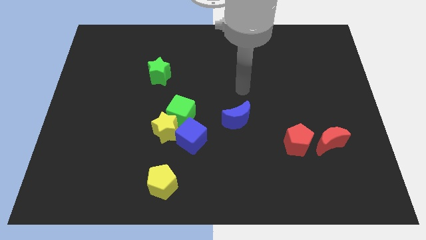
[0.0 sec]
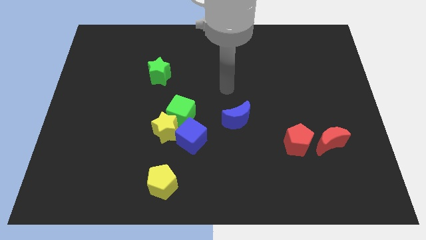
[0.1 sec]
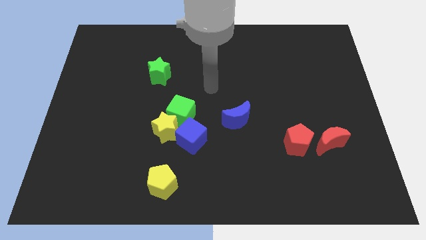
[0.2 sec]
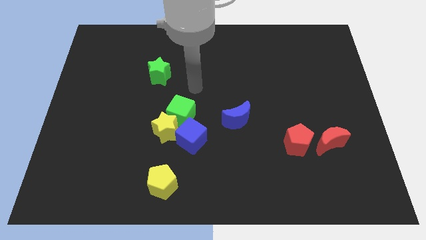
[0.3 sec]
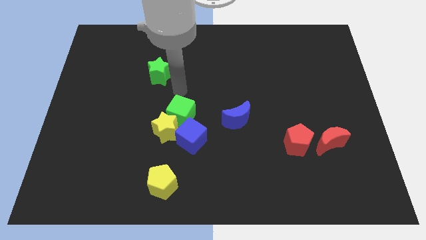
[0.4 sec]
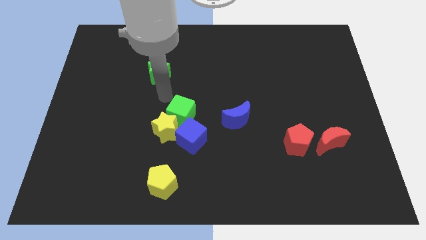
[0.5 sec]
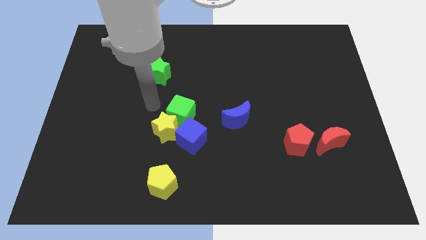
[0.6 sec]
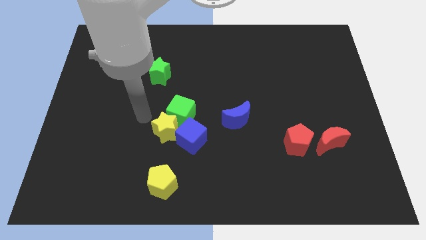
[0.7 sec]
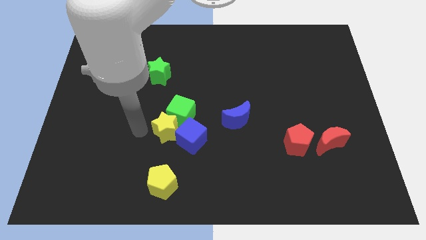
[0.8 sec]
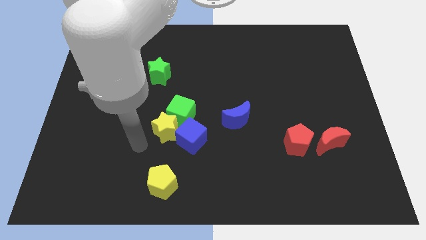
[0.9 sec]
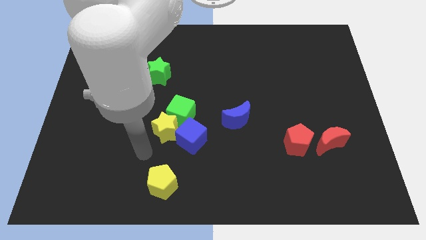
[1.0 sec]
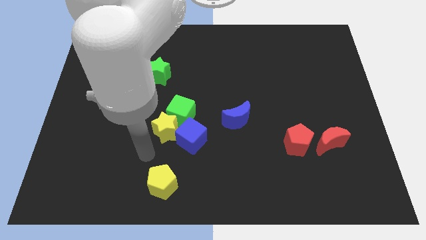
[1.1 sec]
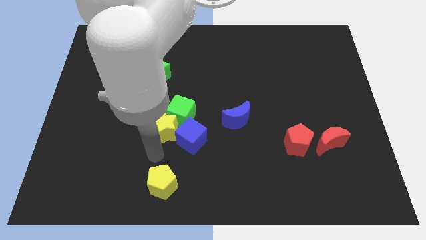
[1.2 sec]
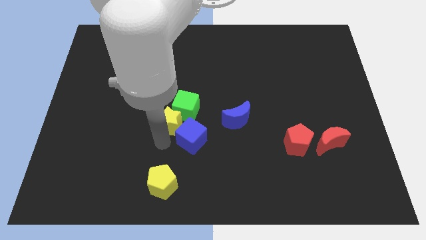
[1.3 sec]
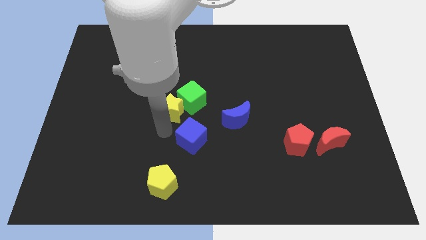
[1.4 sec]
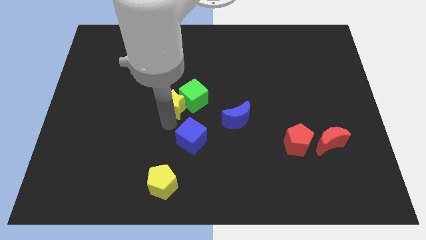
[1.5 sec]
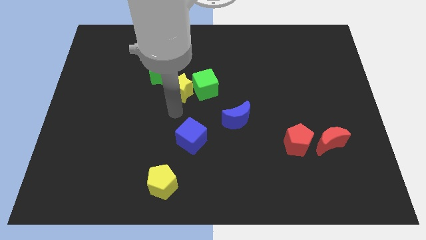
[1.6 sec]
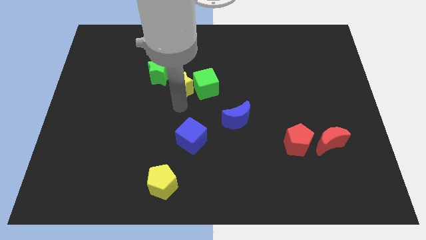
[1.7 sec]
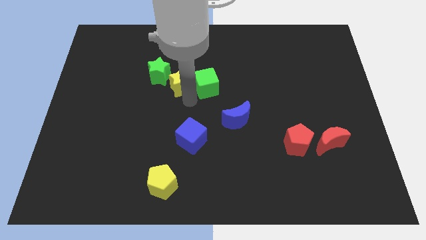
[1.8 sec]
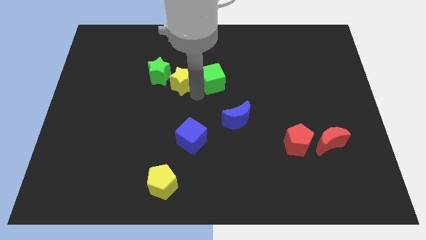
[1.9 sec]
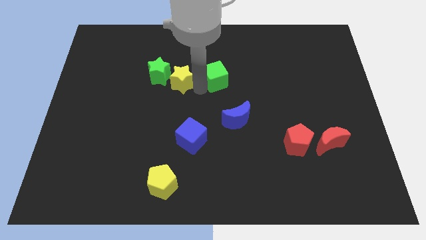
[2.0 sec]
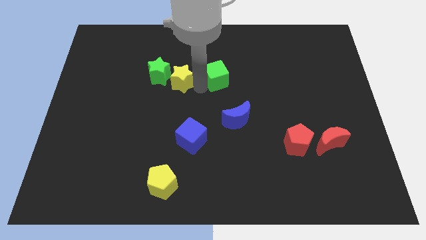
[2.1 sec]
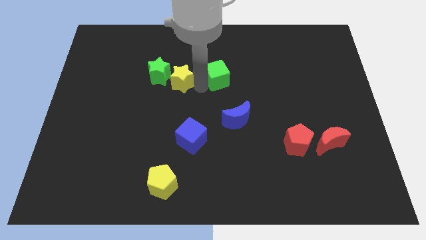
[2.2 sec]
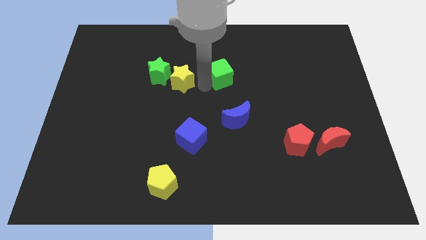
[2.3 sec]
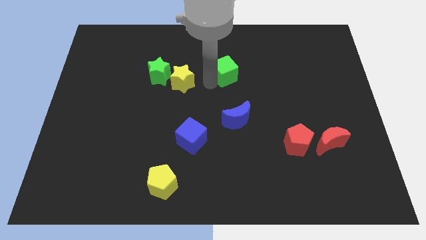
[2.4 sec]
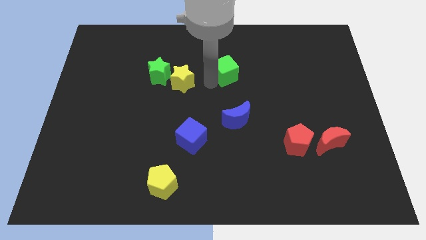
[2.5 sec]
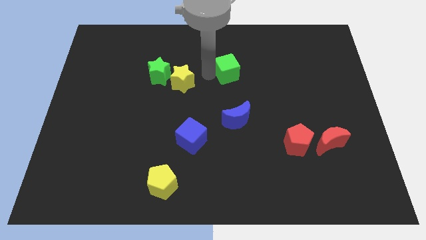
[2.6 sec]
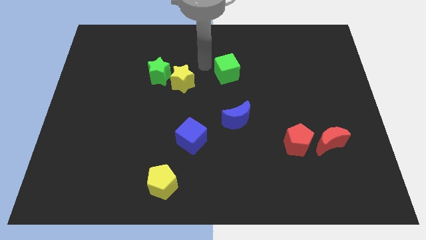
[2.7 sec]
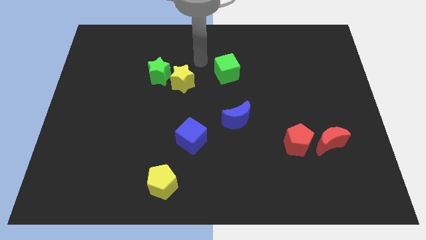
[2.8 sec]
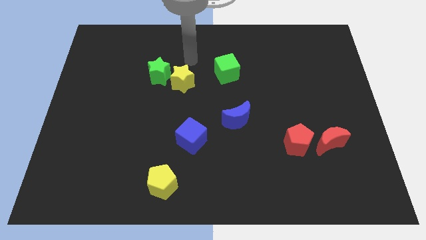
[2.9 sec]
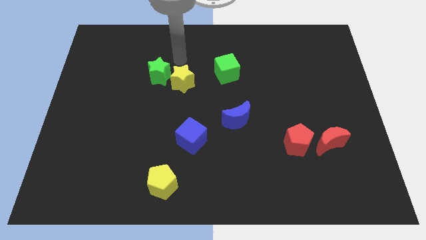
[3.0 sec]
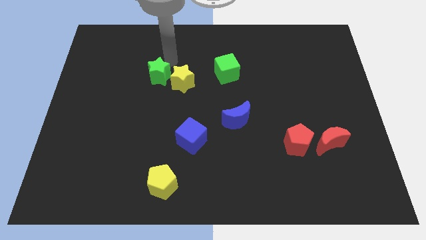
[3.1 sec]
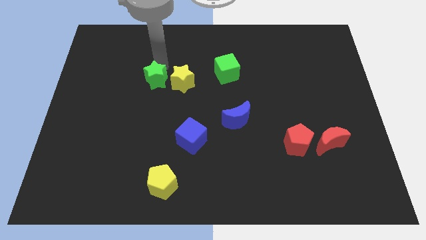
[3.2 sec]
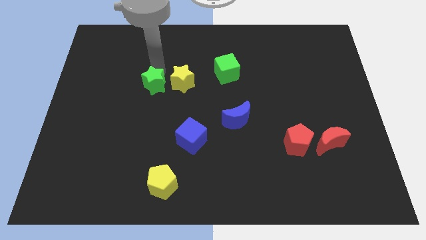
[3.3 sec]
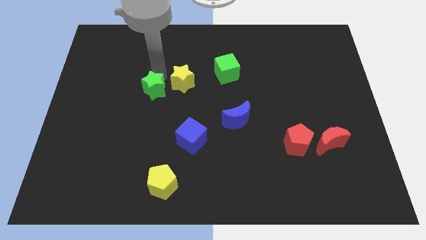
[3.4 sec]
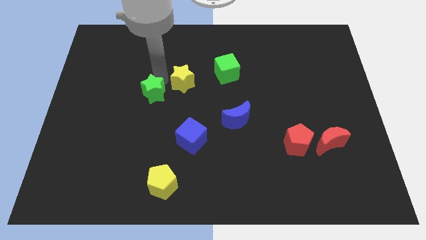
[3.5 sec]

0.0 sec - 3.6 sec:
place the yellow star in between the green blocks

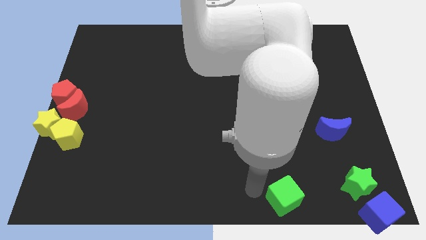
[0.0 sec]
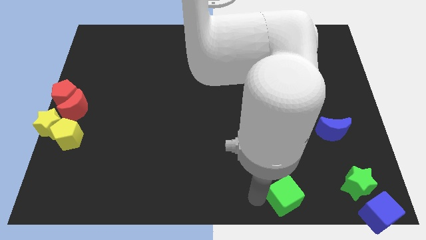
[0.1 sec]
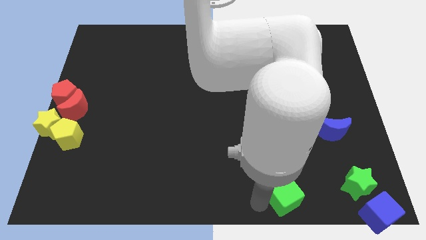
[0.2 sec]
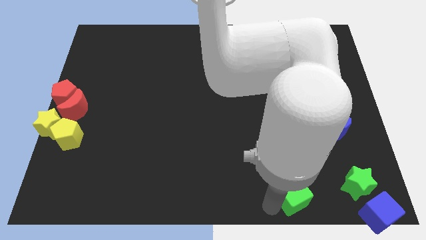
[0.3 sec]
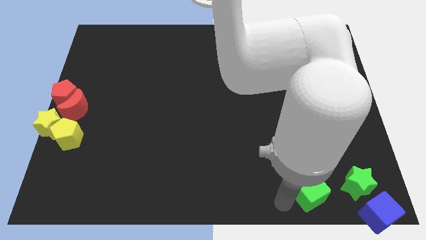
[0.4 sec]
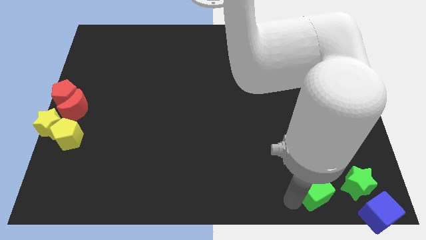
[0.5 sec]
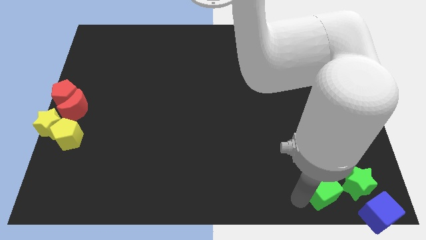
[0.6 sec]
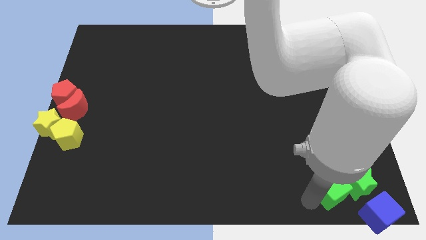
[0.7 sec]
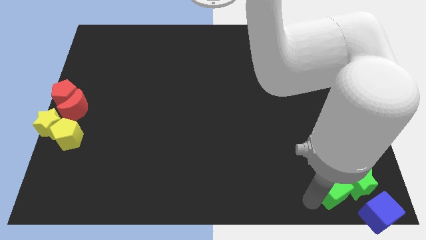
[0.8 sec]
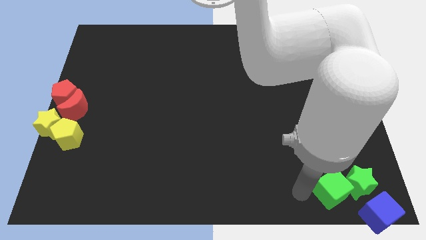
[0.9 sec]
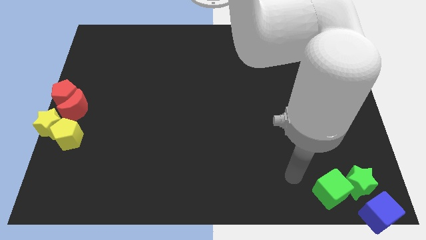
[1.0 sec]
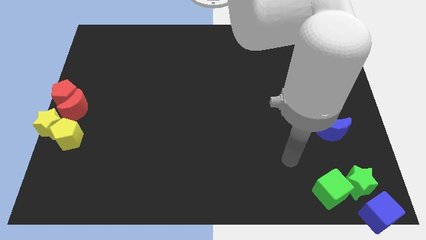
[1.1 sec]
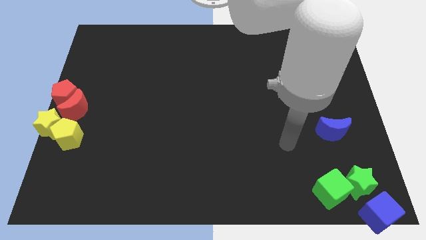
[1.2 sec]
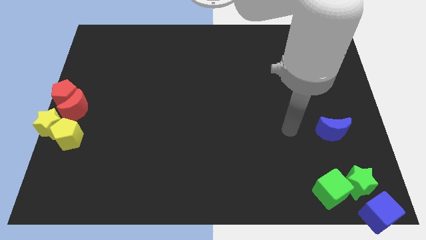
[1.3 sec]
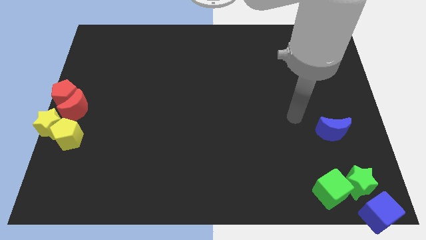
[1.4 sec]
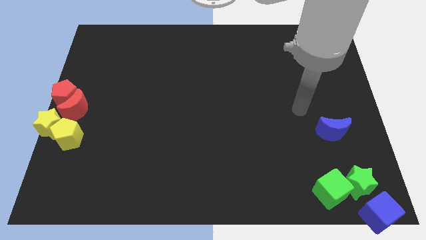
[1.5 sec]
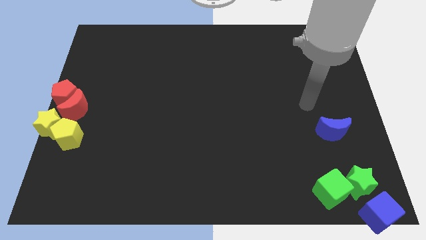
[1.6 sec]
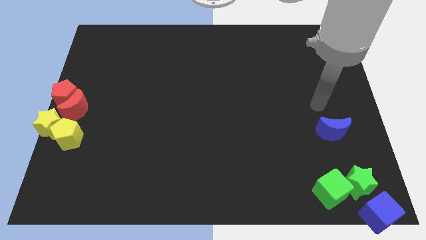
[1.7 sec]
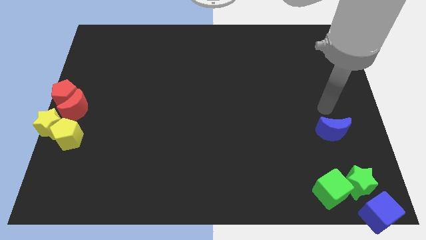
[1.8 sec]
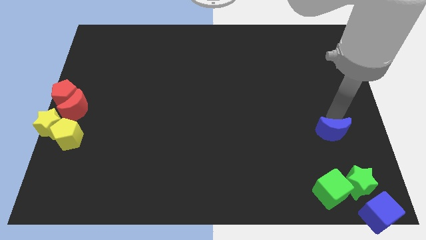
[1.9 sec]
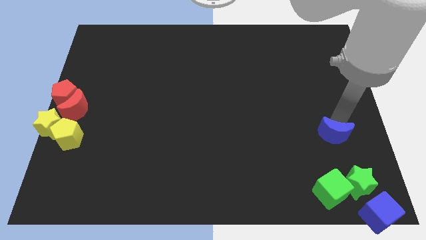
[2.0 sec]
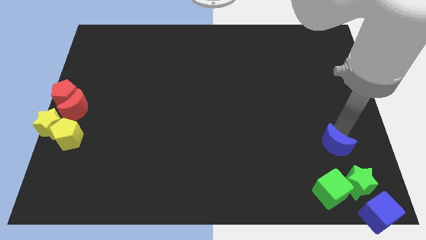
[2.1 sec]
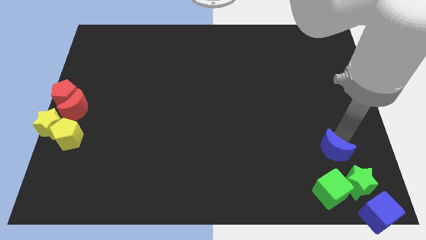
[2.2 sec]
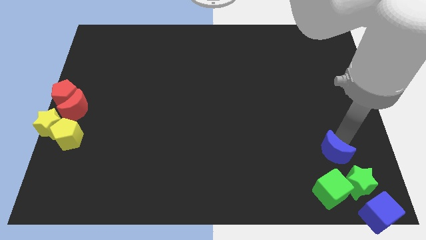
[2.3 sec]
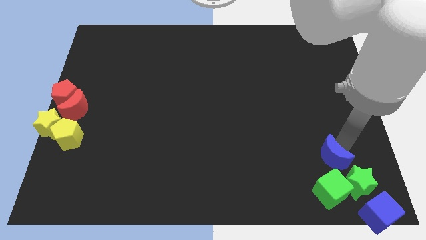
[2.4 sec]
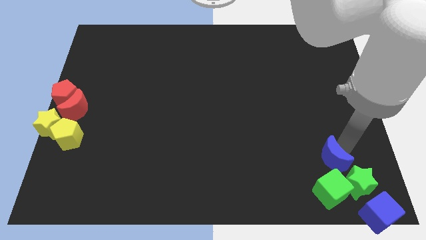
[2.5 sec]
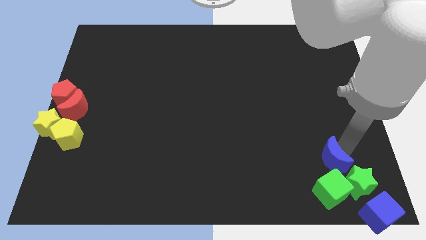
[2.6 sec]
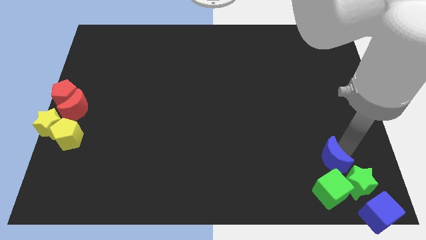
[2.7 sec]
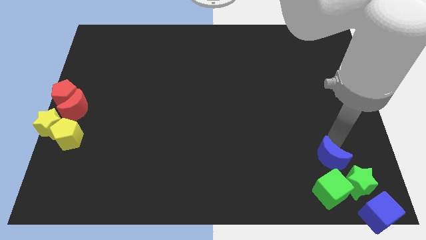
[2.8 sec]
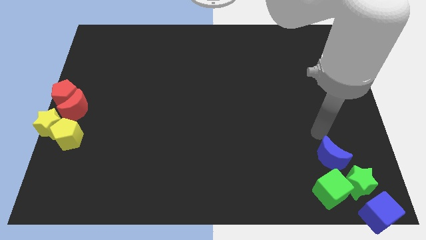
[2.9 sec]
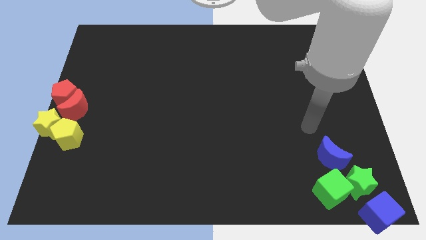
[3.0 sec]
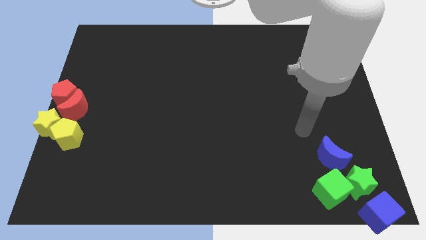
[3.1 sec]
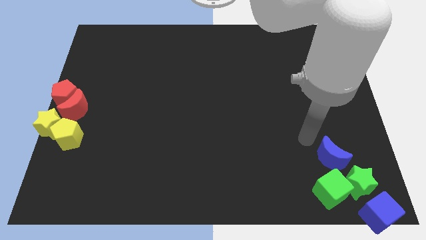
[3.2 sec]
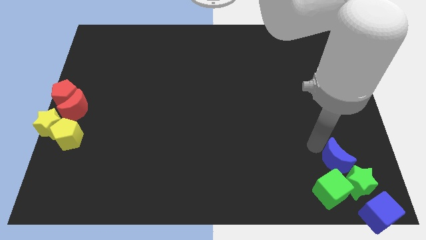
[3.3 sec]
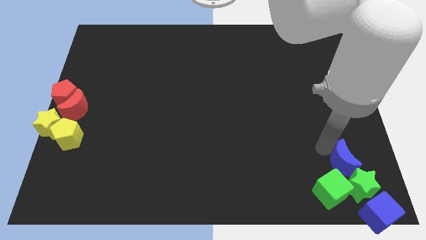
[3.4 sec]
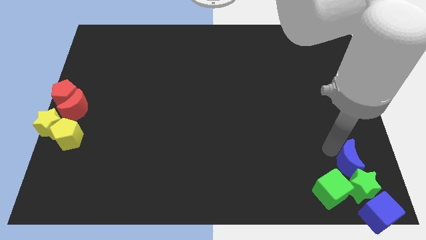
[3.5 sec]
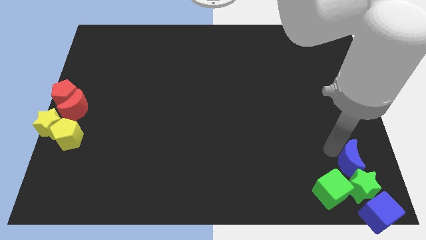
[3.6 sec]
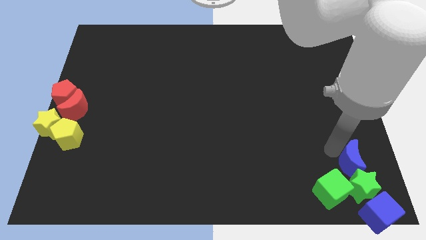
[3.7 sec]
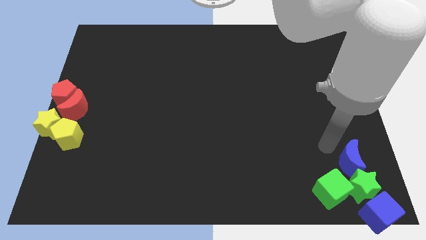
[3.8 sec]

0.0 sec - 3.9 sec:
push the blue crescent into the green star

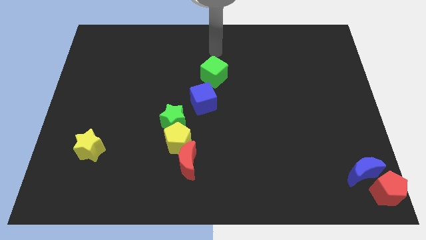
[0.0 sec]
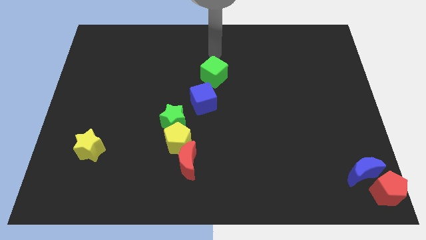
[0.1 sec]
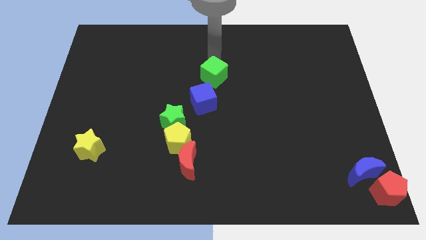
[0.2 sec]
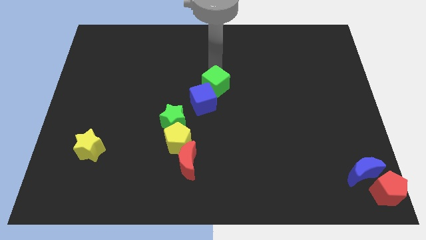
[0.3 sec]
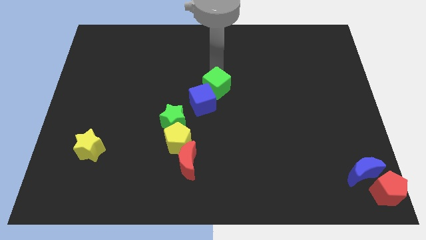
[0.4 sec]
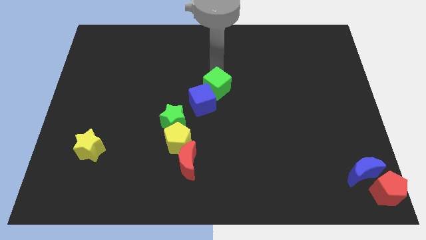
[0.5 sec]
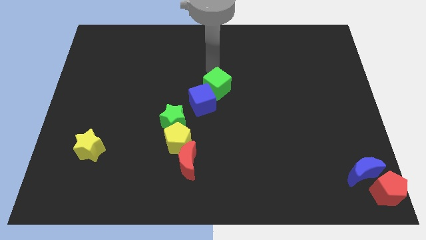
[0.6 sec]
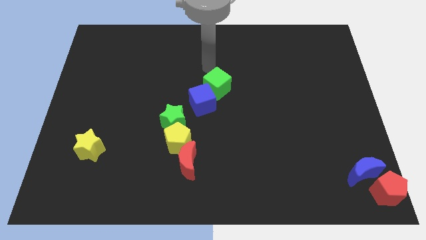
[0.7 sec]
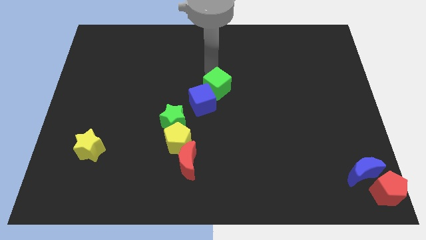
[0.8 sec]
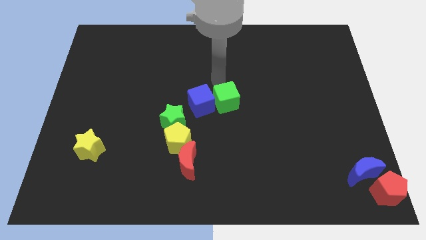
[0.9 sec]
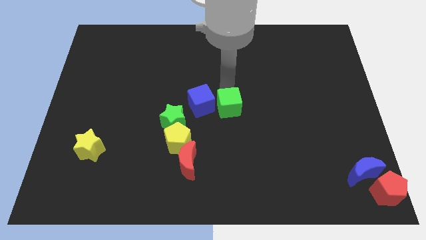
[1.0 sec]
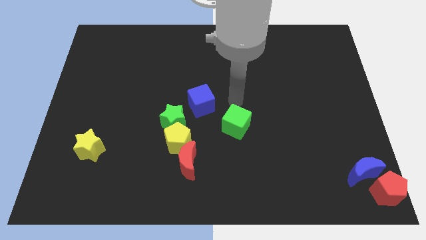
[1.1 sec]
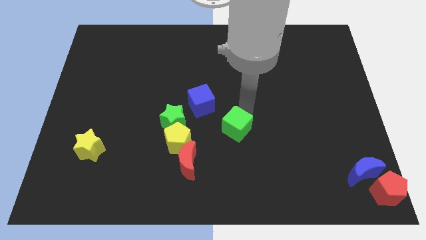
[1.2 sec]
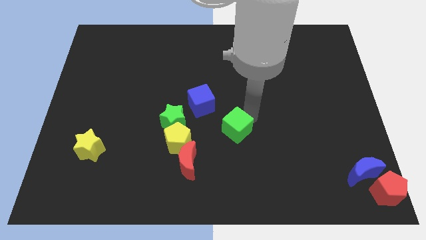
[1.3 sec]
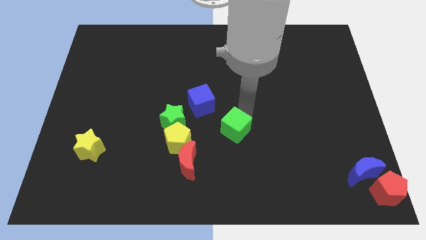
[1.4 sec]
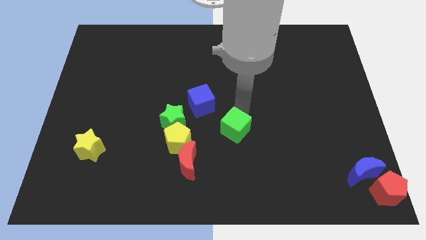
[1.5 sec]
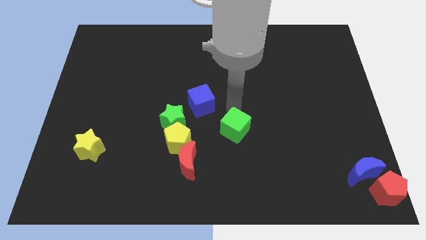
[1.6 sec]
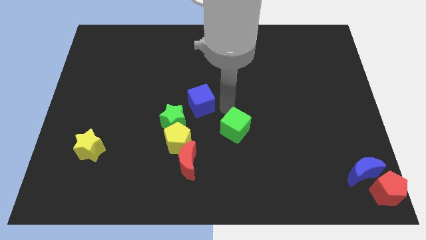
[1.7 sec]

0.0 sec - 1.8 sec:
push the green cube to the right of the yellow pentagon
